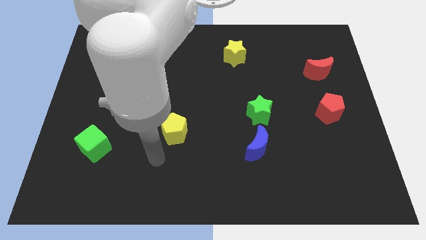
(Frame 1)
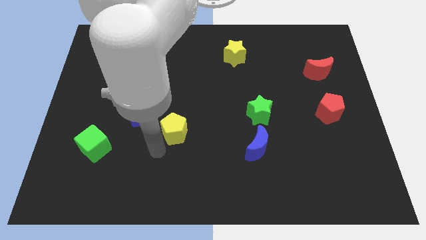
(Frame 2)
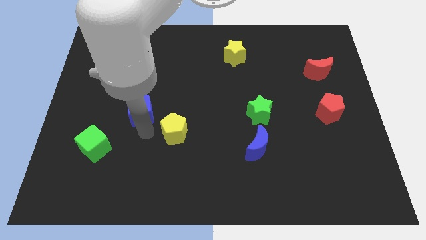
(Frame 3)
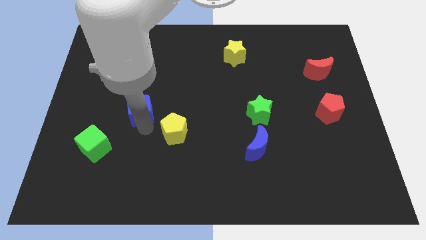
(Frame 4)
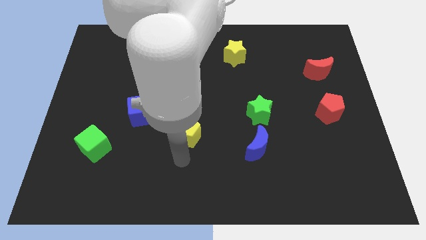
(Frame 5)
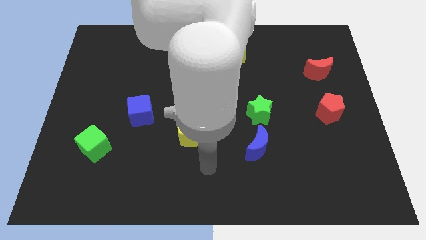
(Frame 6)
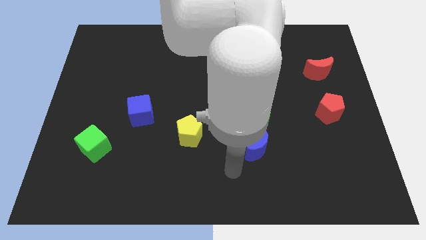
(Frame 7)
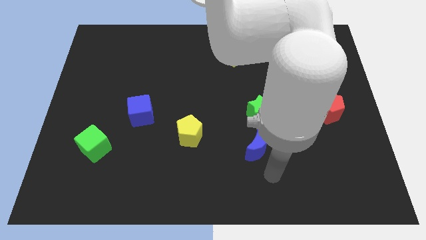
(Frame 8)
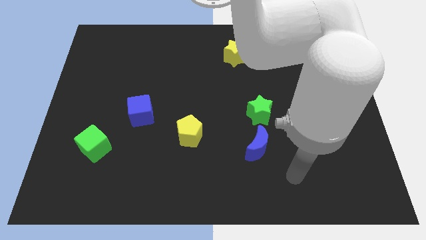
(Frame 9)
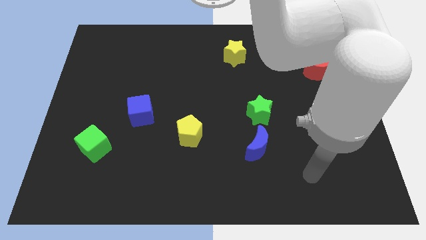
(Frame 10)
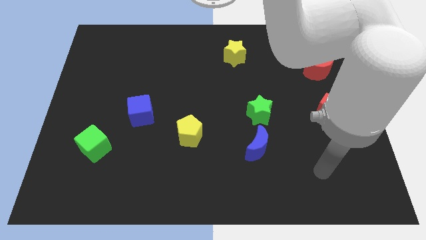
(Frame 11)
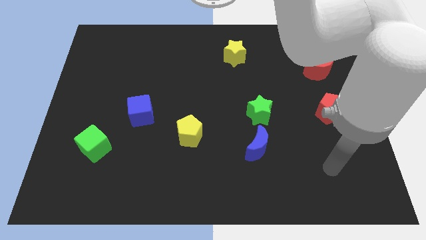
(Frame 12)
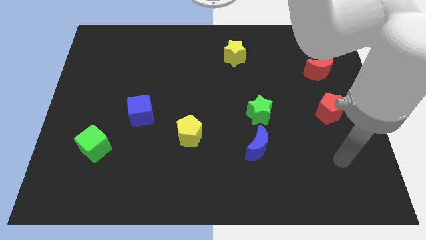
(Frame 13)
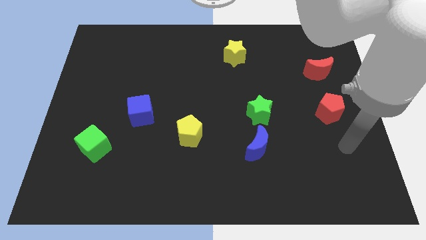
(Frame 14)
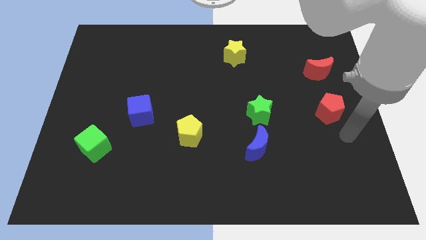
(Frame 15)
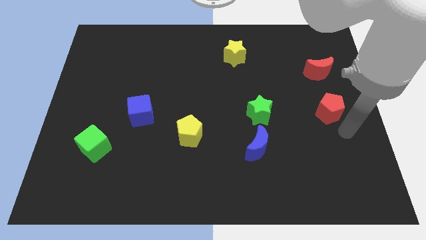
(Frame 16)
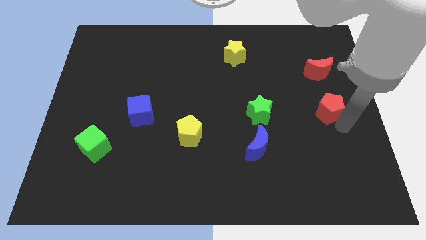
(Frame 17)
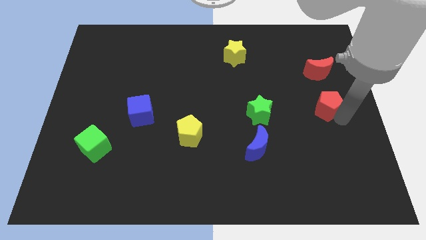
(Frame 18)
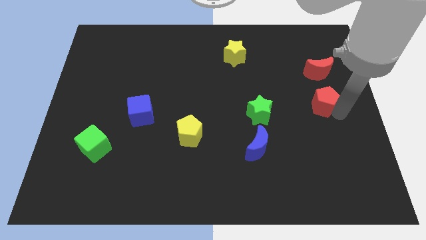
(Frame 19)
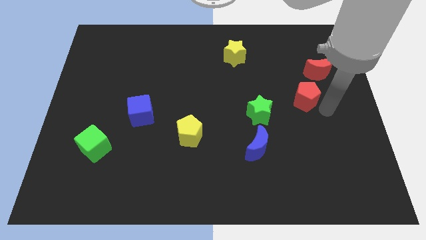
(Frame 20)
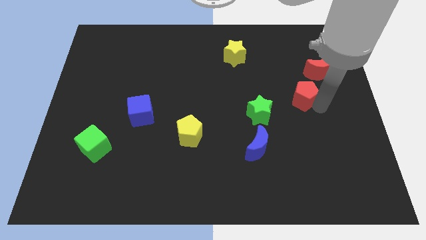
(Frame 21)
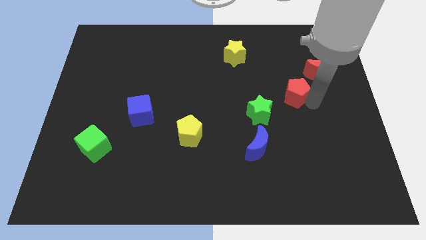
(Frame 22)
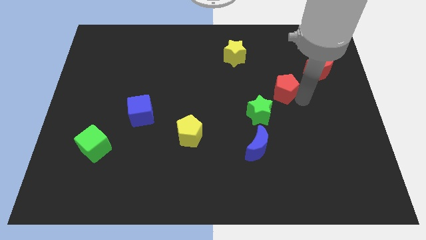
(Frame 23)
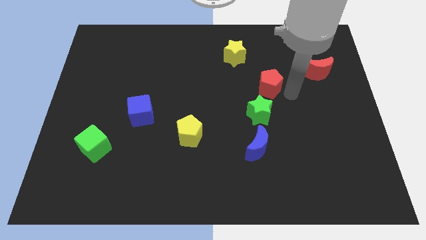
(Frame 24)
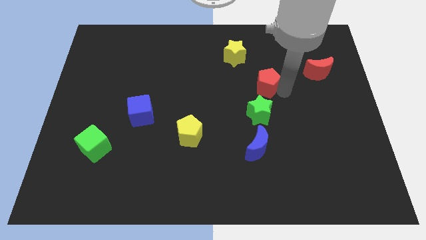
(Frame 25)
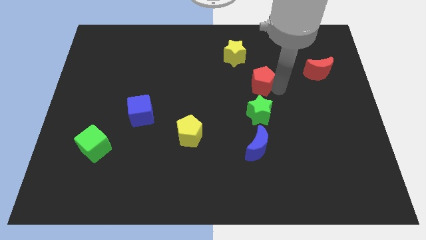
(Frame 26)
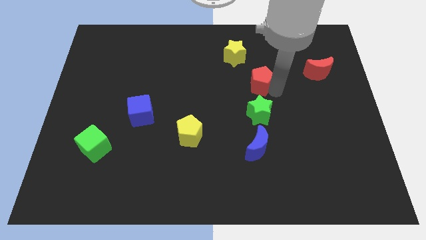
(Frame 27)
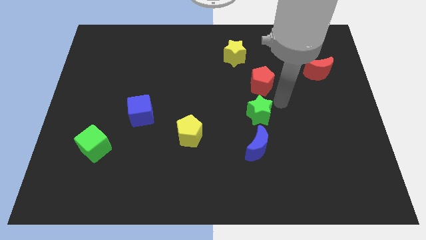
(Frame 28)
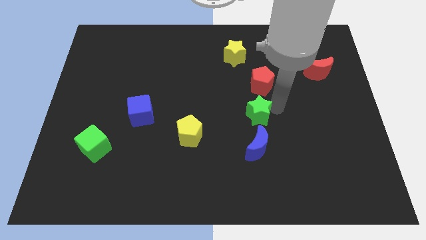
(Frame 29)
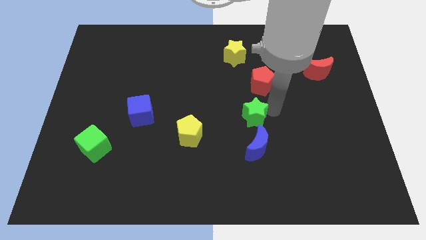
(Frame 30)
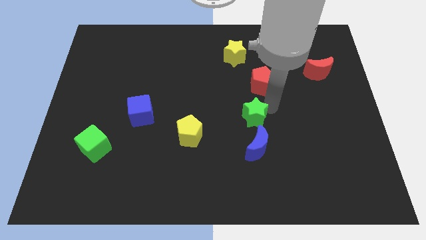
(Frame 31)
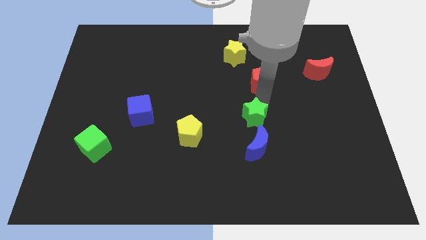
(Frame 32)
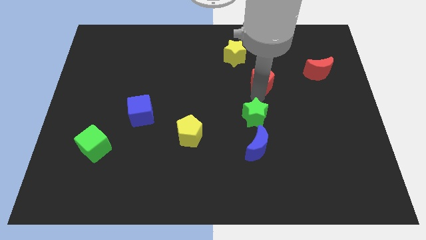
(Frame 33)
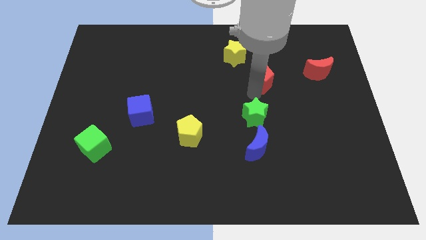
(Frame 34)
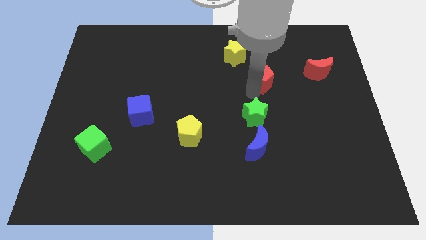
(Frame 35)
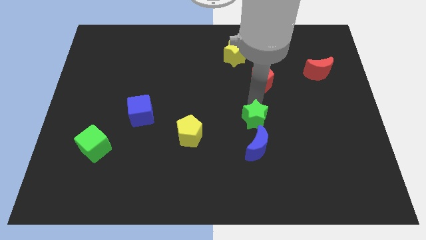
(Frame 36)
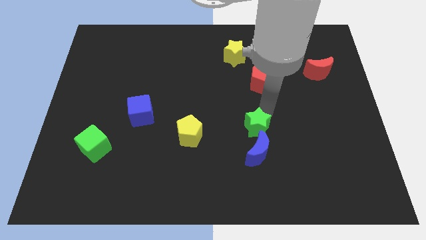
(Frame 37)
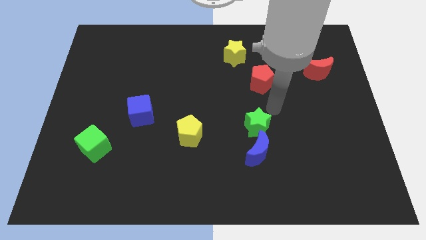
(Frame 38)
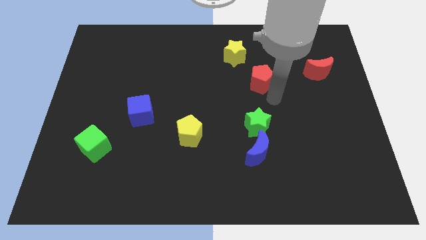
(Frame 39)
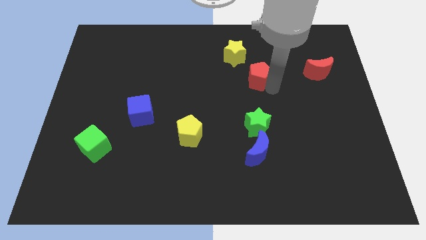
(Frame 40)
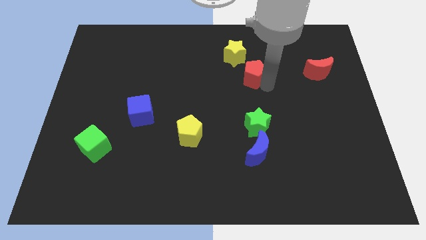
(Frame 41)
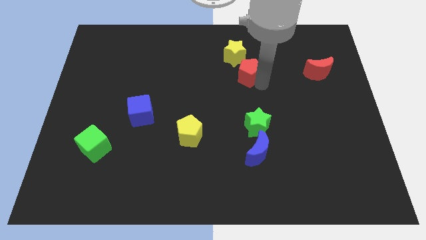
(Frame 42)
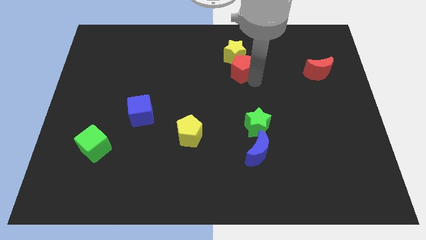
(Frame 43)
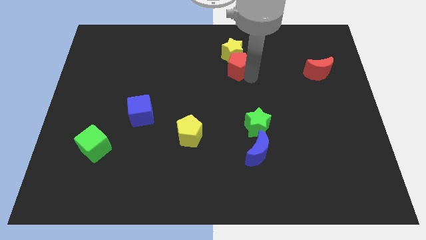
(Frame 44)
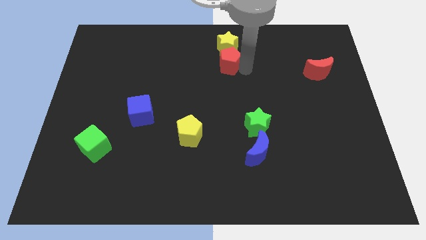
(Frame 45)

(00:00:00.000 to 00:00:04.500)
slide the red pentagon to the yellow star

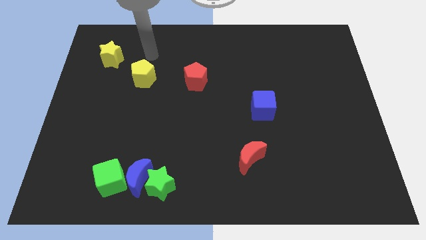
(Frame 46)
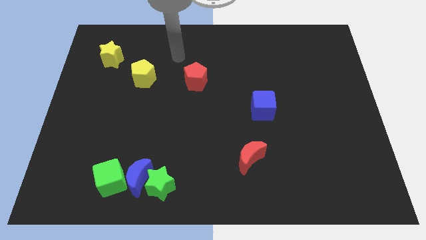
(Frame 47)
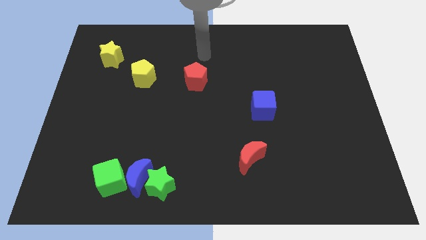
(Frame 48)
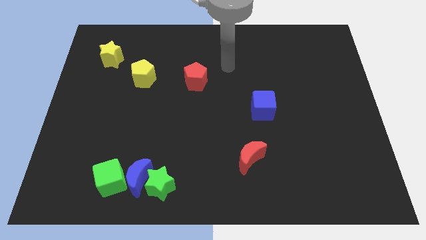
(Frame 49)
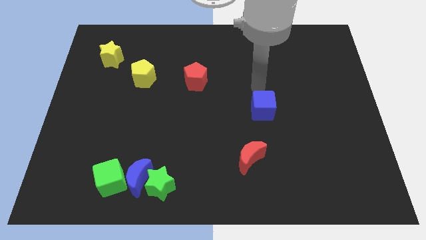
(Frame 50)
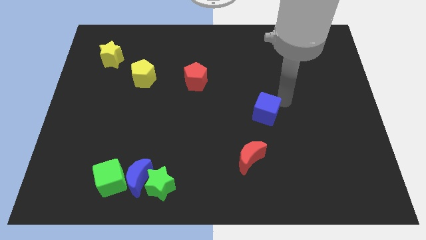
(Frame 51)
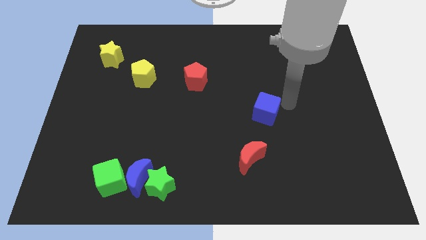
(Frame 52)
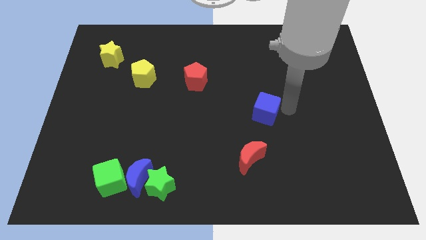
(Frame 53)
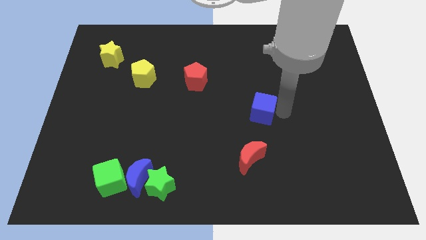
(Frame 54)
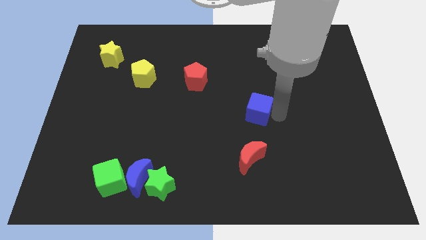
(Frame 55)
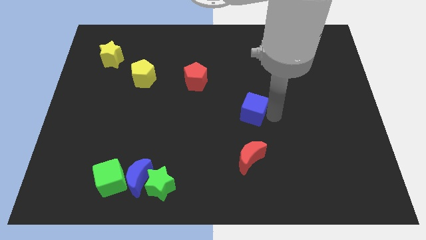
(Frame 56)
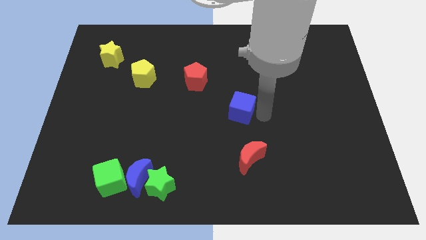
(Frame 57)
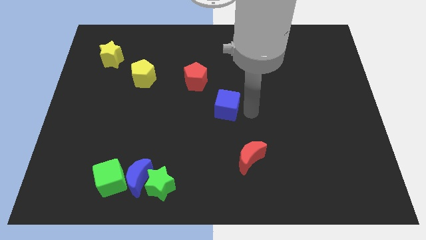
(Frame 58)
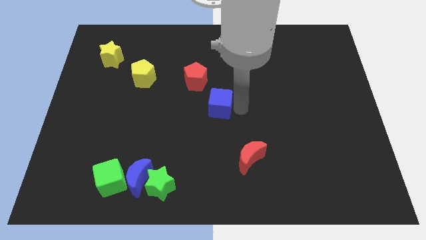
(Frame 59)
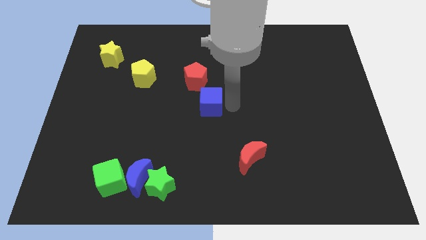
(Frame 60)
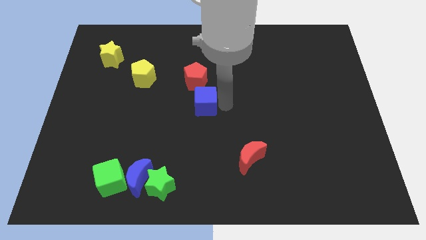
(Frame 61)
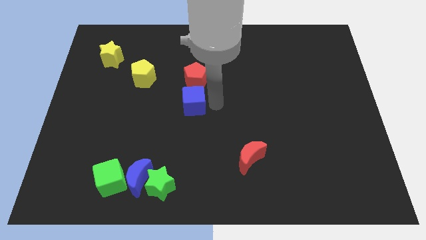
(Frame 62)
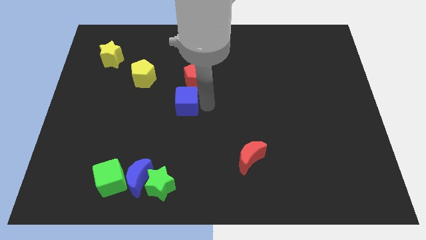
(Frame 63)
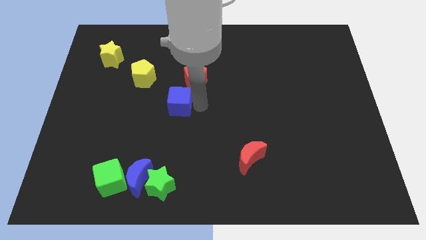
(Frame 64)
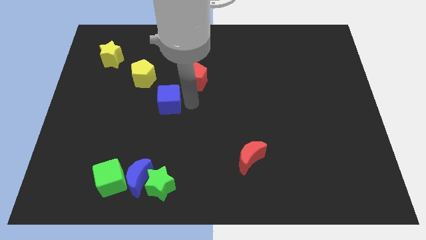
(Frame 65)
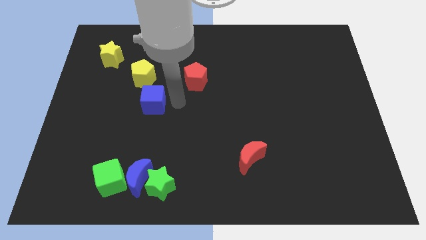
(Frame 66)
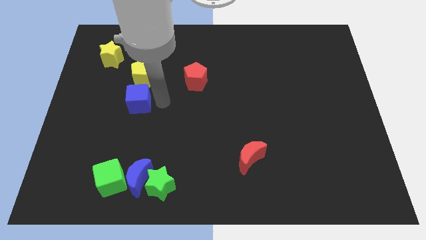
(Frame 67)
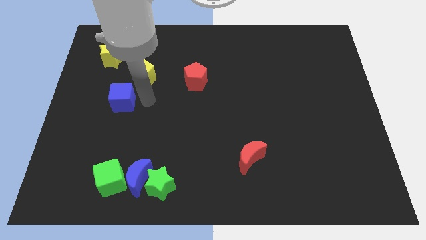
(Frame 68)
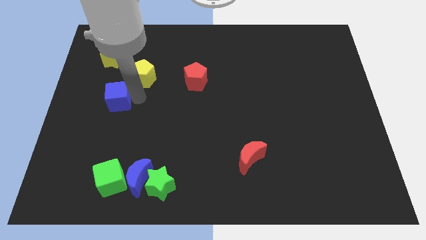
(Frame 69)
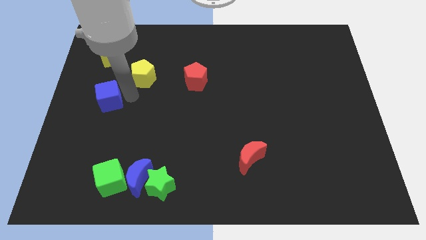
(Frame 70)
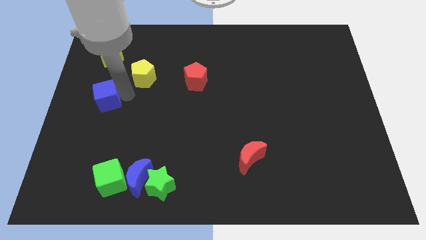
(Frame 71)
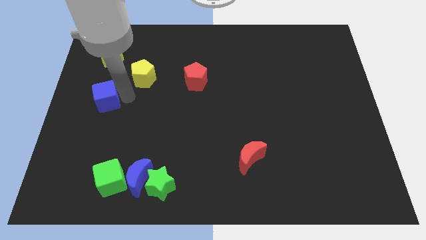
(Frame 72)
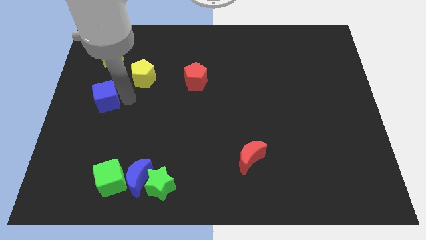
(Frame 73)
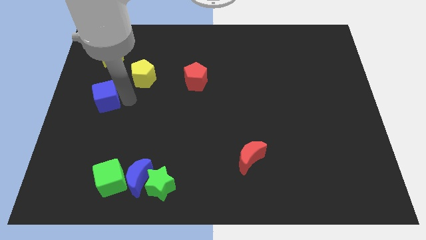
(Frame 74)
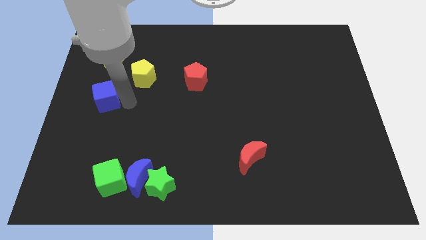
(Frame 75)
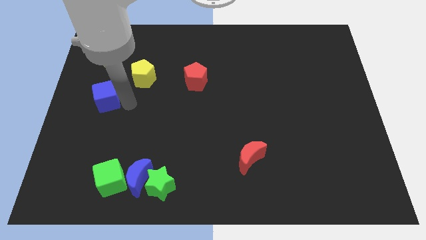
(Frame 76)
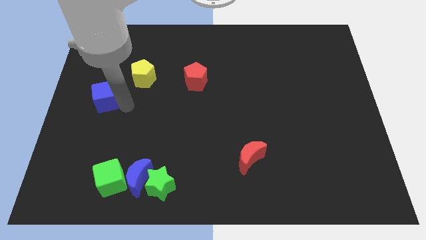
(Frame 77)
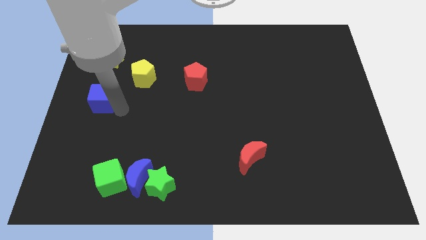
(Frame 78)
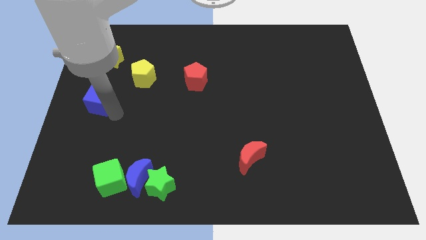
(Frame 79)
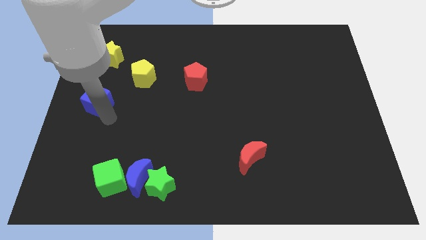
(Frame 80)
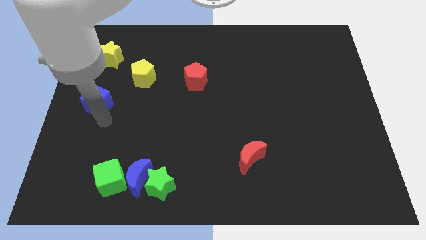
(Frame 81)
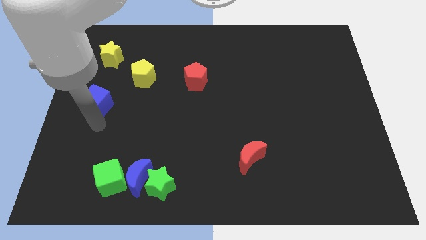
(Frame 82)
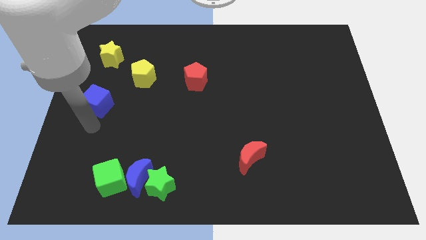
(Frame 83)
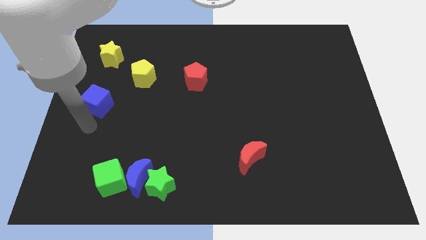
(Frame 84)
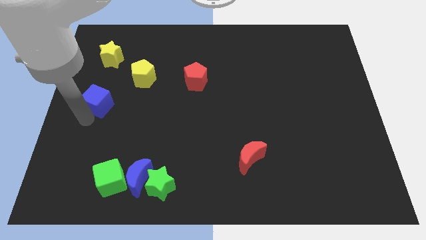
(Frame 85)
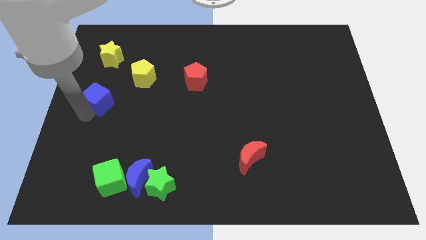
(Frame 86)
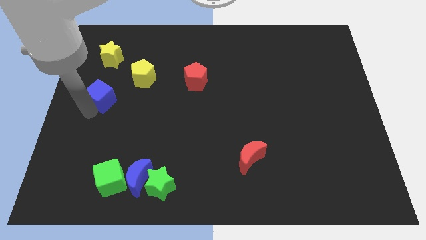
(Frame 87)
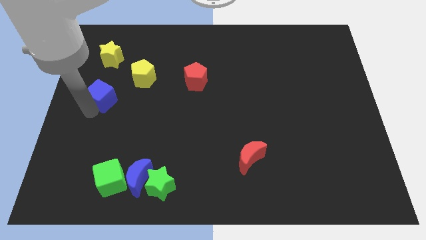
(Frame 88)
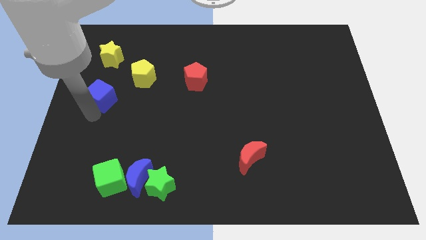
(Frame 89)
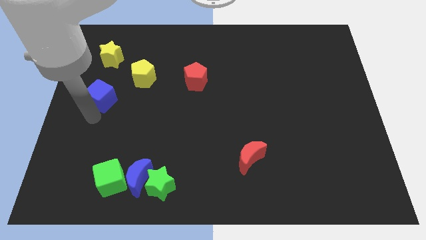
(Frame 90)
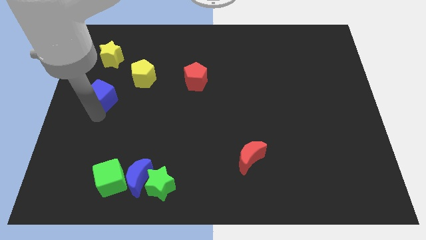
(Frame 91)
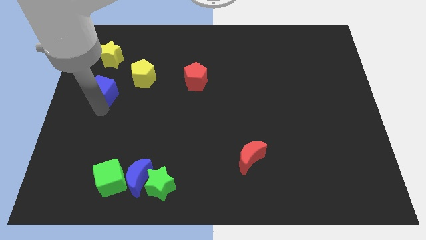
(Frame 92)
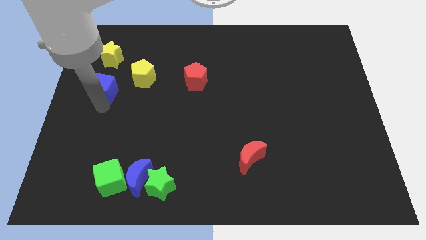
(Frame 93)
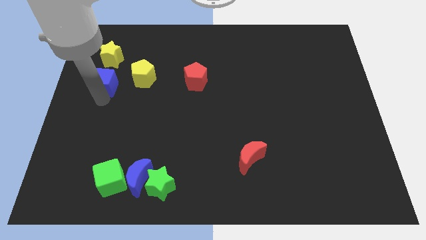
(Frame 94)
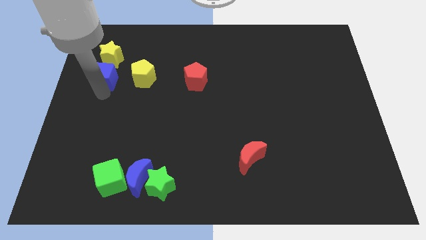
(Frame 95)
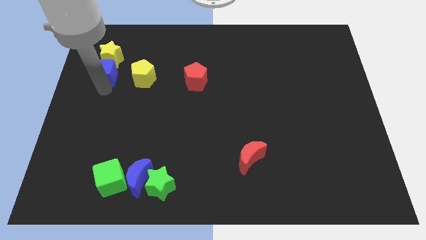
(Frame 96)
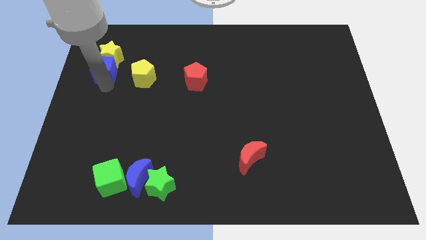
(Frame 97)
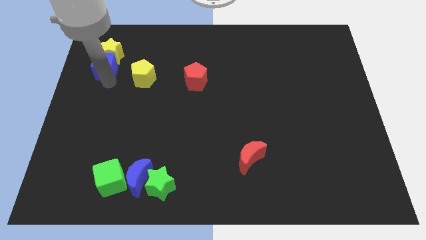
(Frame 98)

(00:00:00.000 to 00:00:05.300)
slide the blue cube towards the yellow star
